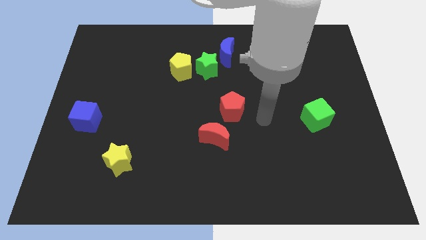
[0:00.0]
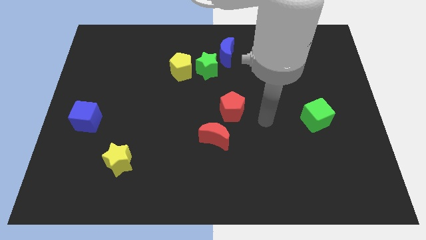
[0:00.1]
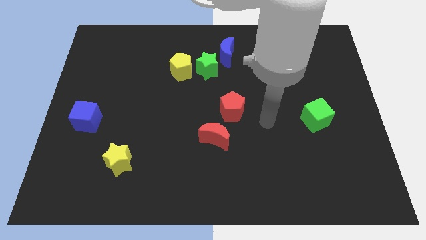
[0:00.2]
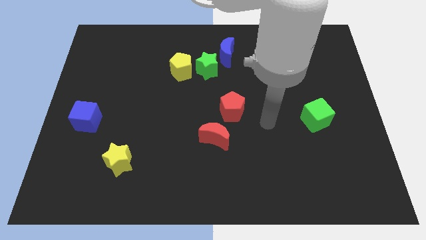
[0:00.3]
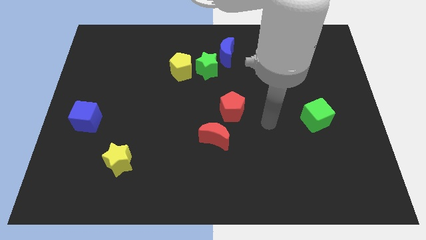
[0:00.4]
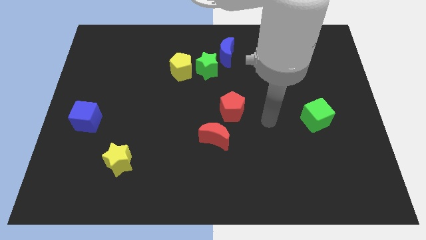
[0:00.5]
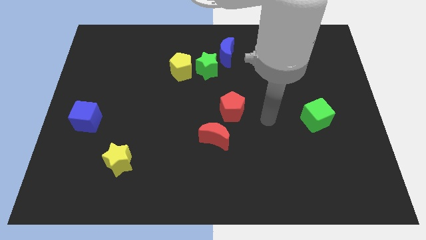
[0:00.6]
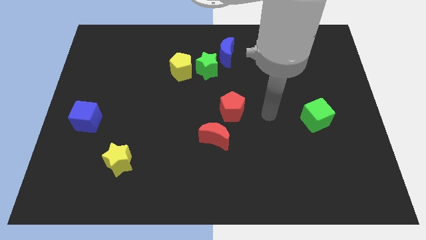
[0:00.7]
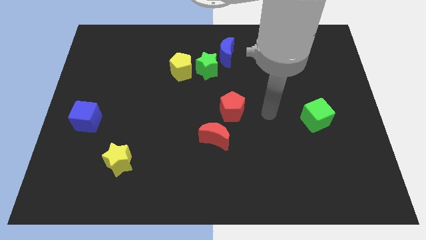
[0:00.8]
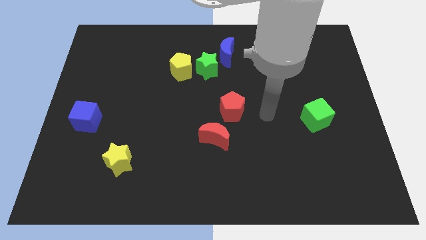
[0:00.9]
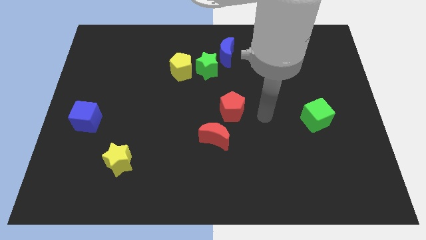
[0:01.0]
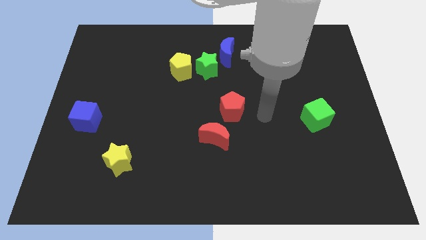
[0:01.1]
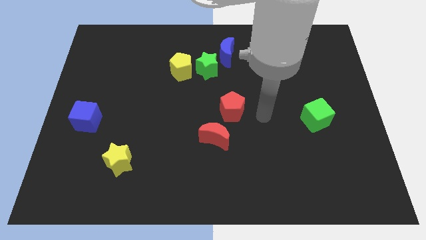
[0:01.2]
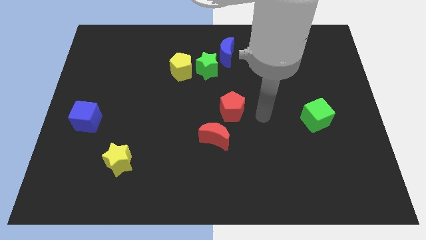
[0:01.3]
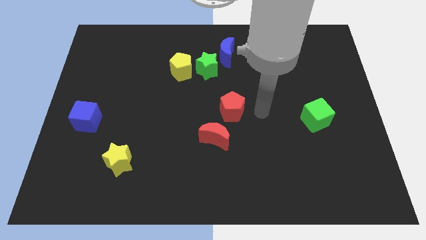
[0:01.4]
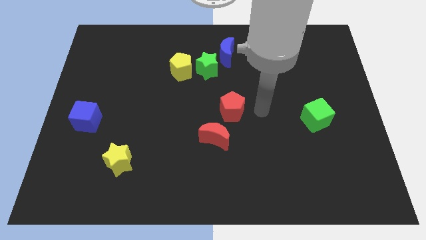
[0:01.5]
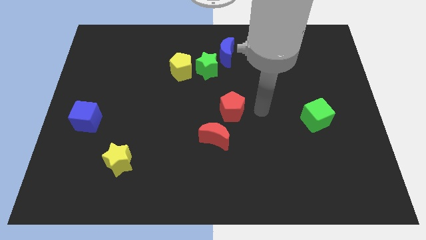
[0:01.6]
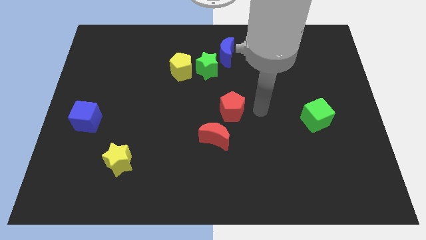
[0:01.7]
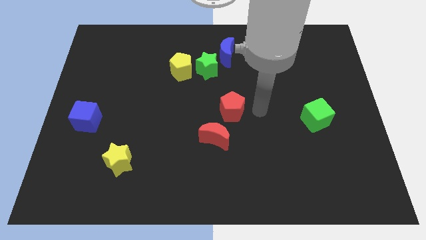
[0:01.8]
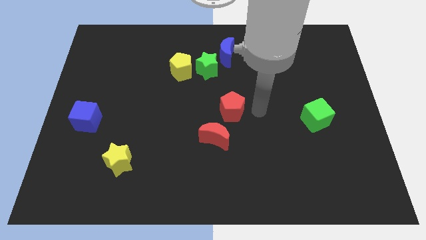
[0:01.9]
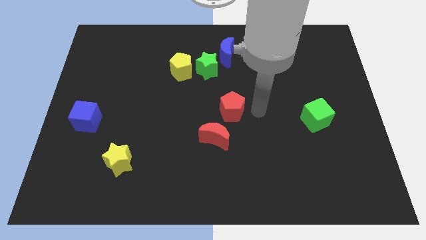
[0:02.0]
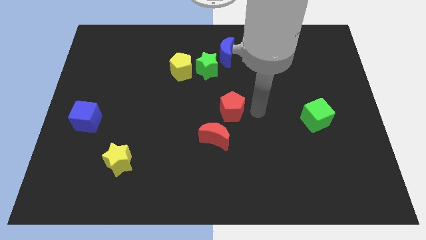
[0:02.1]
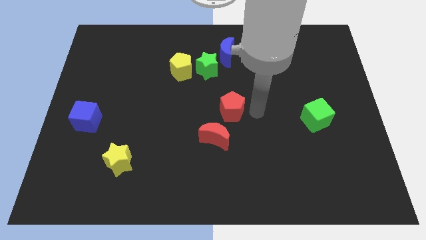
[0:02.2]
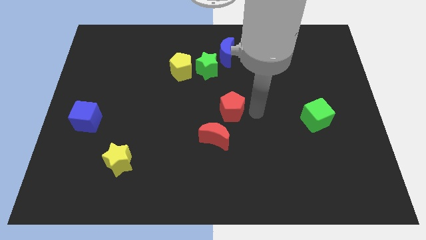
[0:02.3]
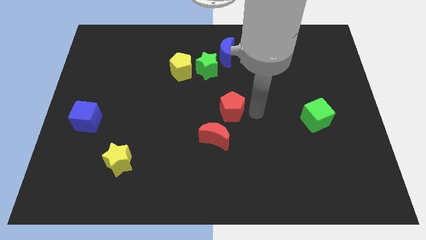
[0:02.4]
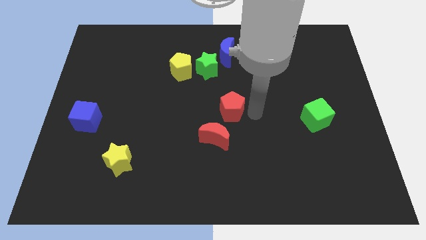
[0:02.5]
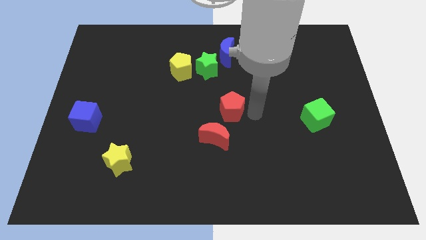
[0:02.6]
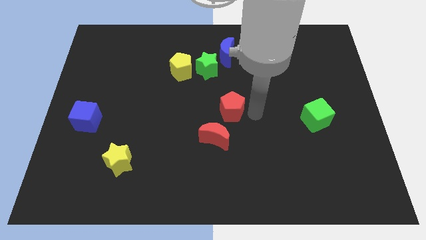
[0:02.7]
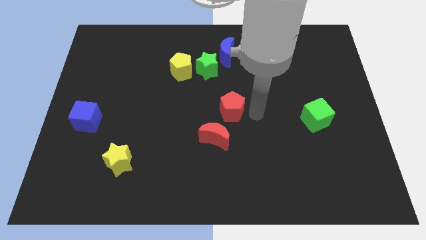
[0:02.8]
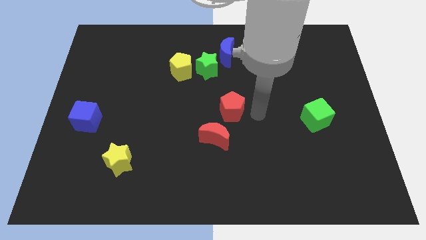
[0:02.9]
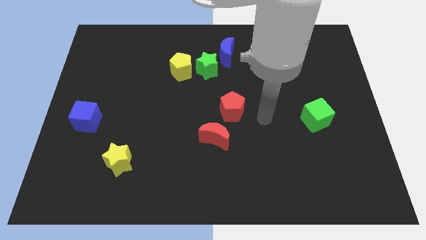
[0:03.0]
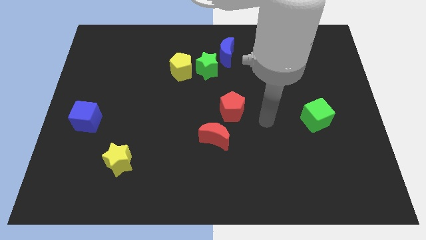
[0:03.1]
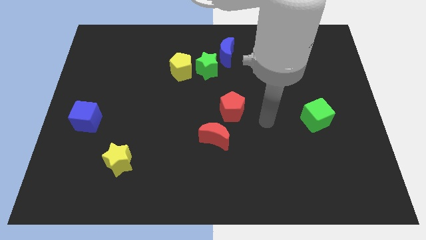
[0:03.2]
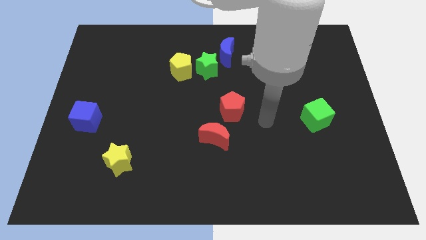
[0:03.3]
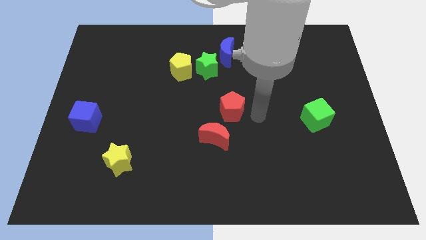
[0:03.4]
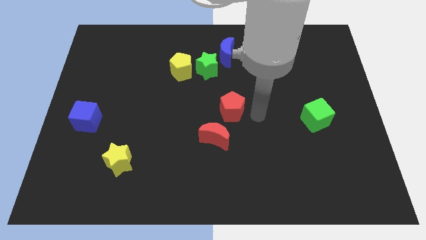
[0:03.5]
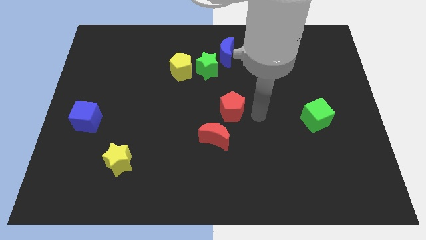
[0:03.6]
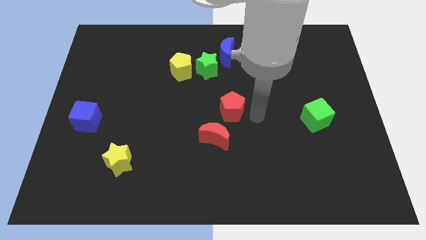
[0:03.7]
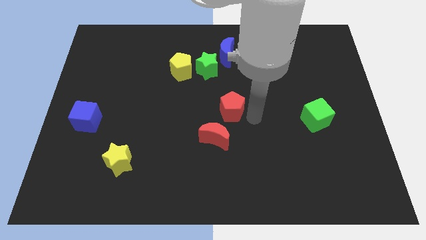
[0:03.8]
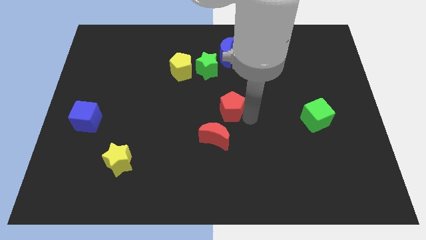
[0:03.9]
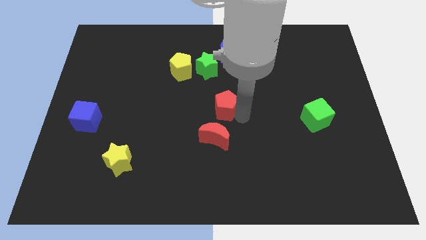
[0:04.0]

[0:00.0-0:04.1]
tap the red pentagon

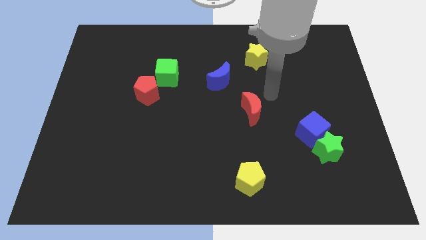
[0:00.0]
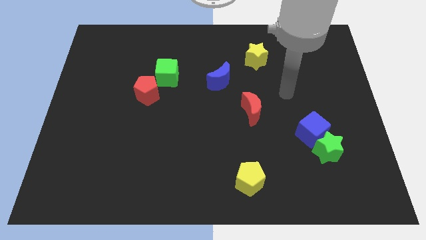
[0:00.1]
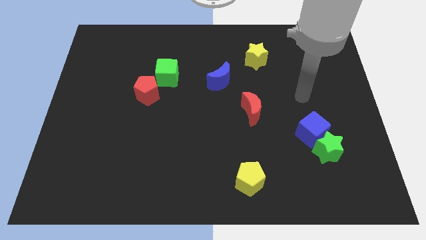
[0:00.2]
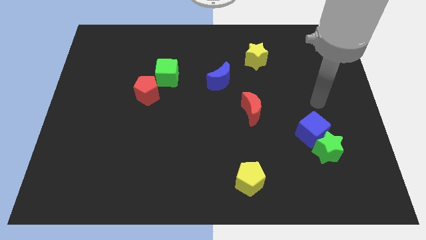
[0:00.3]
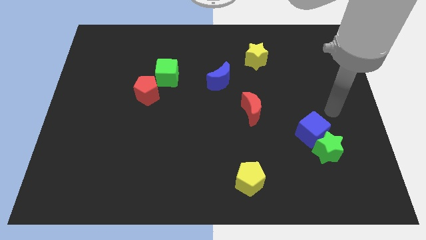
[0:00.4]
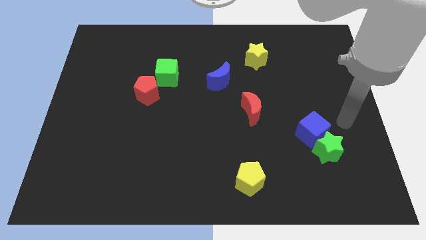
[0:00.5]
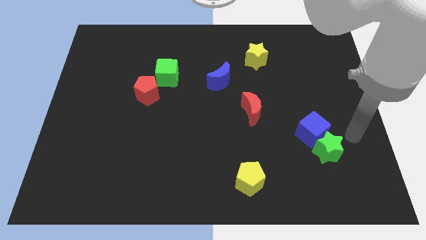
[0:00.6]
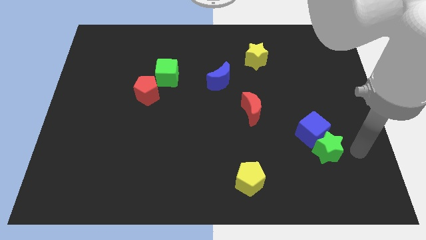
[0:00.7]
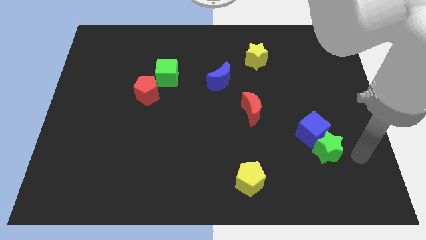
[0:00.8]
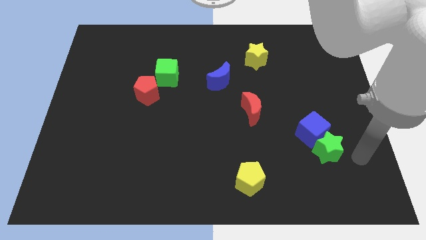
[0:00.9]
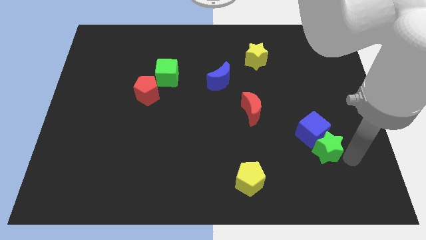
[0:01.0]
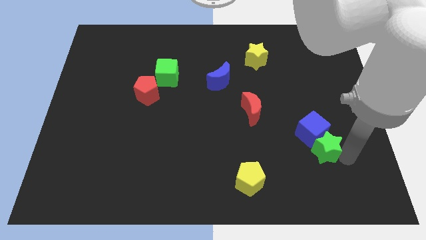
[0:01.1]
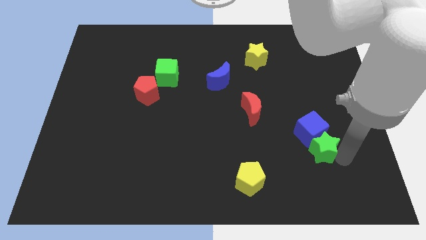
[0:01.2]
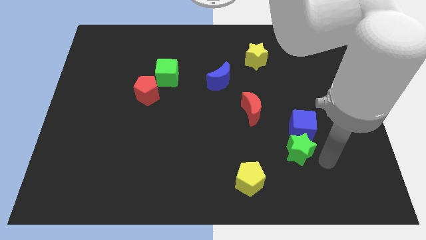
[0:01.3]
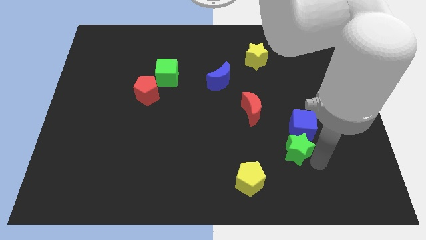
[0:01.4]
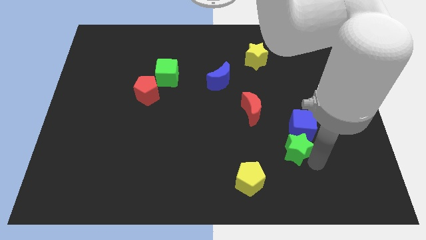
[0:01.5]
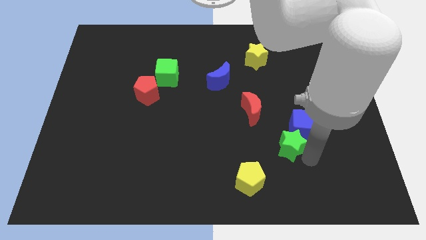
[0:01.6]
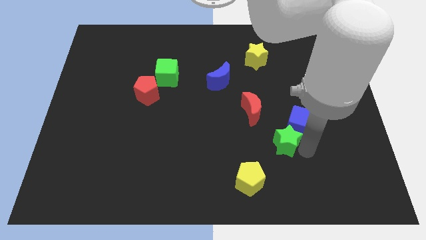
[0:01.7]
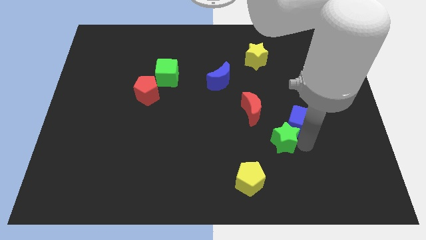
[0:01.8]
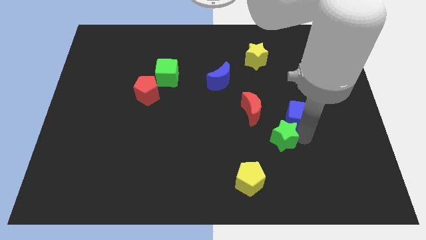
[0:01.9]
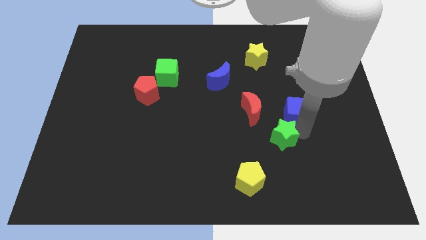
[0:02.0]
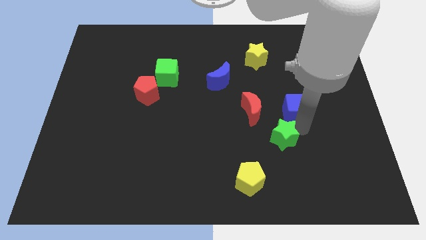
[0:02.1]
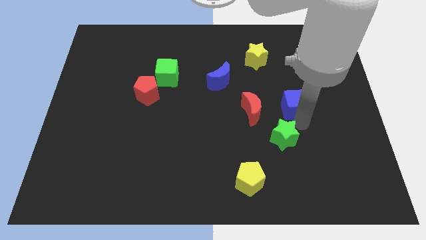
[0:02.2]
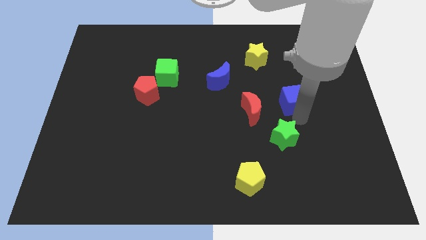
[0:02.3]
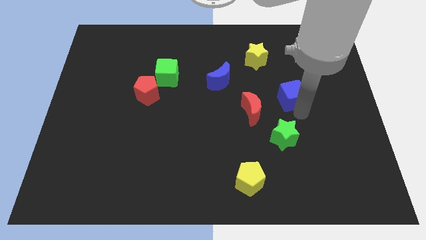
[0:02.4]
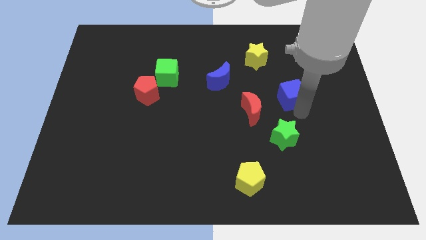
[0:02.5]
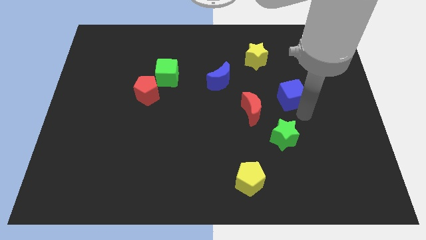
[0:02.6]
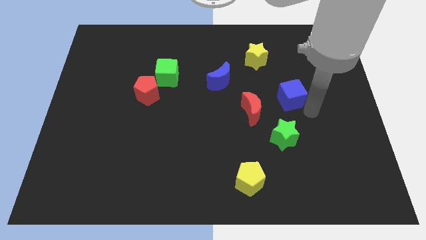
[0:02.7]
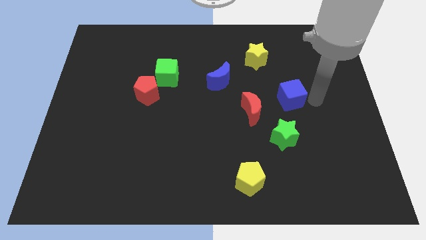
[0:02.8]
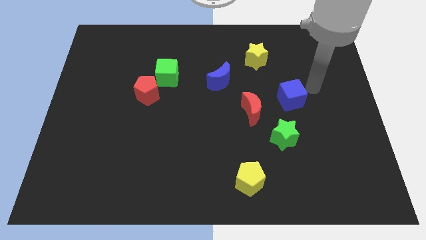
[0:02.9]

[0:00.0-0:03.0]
place the blue cube above the green star

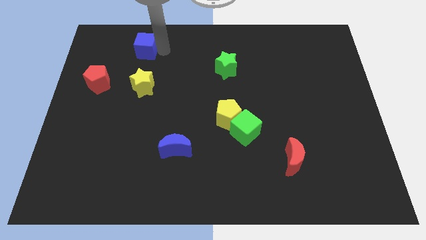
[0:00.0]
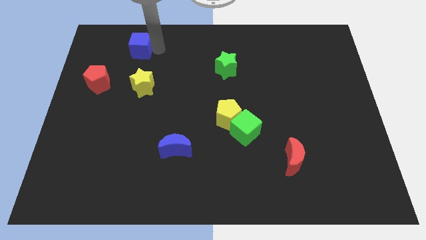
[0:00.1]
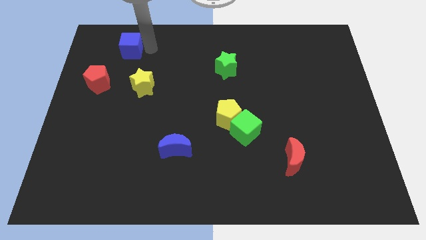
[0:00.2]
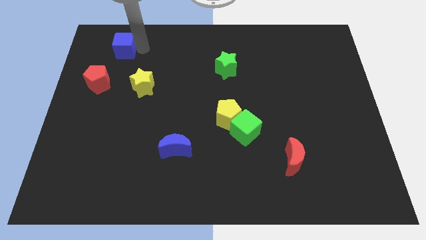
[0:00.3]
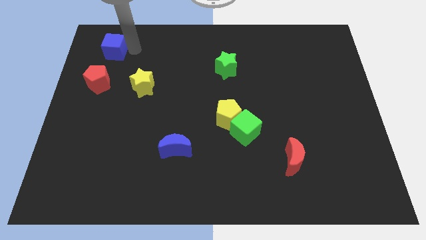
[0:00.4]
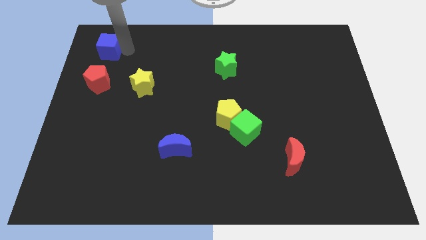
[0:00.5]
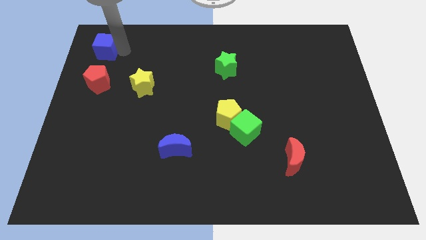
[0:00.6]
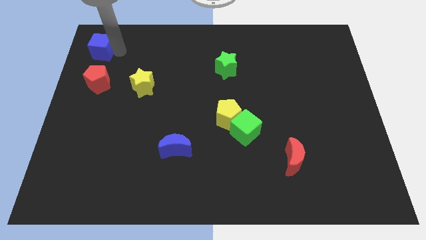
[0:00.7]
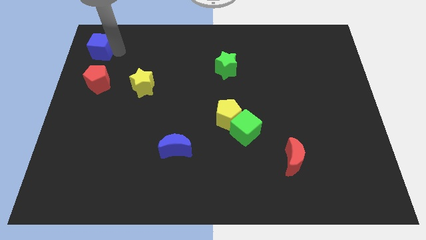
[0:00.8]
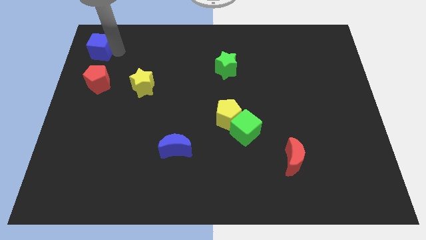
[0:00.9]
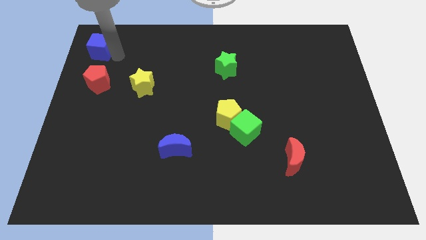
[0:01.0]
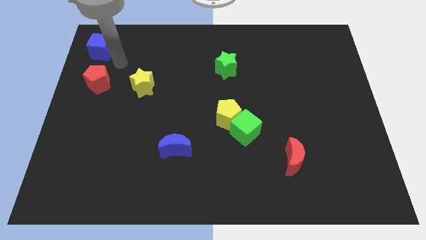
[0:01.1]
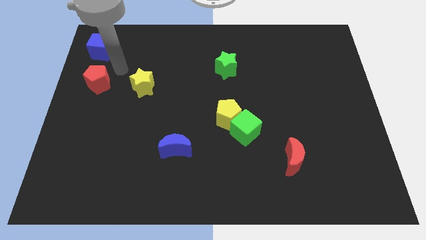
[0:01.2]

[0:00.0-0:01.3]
place the blue cube vertically above the red pentagon

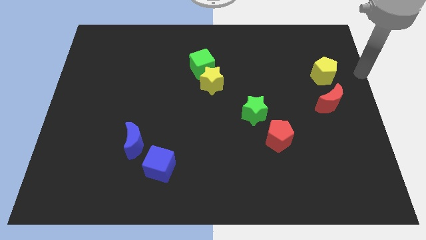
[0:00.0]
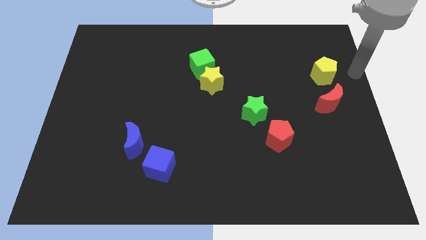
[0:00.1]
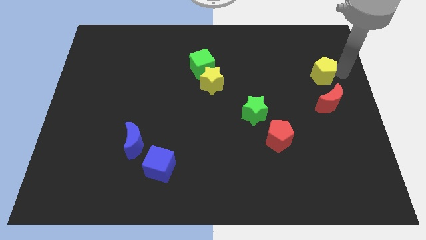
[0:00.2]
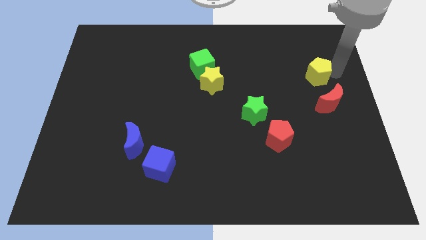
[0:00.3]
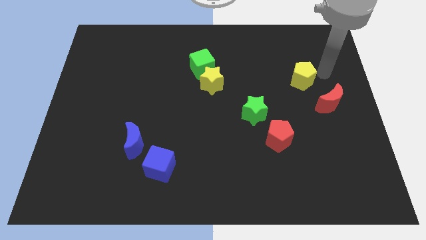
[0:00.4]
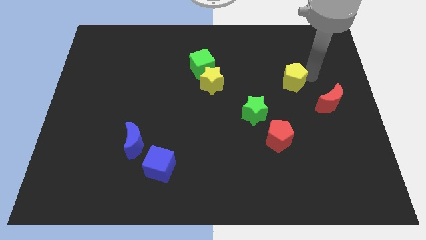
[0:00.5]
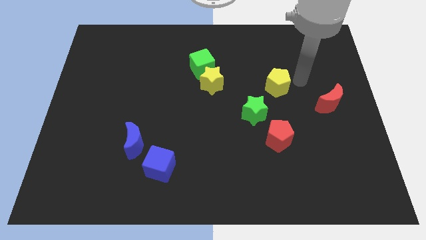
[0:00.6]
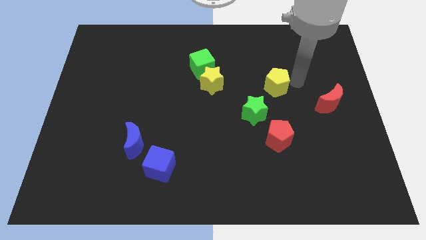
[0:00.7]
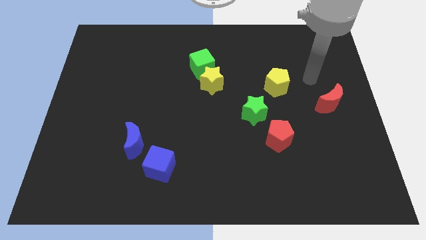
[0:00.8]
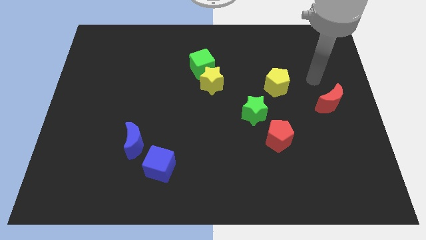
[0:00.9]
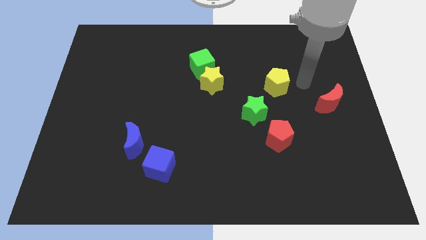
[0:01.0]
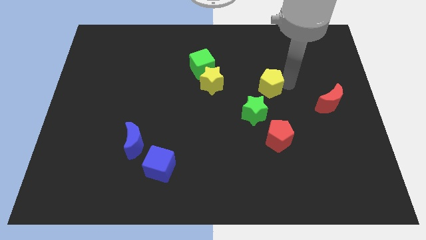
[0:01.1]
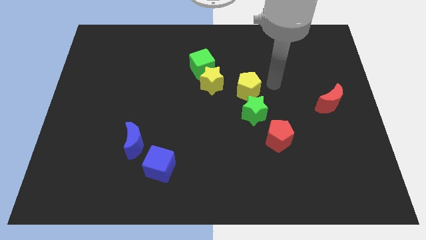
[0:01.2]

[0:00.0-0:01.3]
place yellow pentagon above the green star
